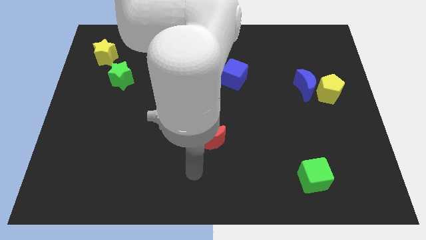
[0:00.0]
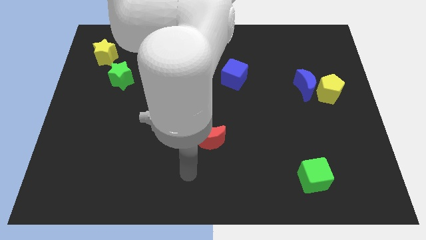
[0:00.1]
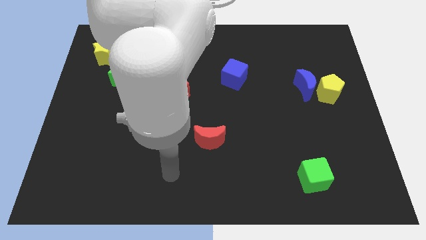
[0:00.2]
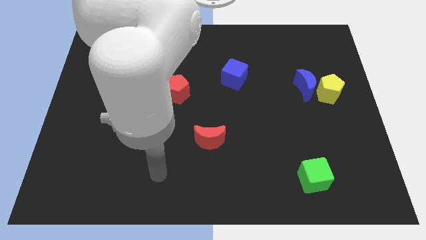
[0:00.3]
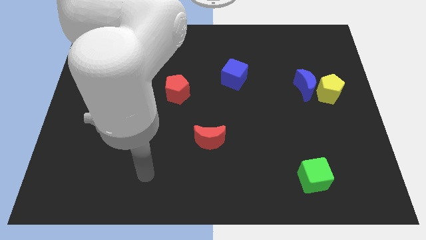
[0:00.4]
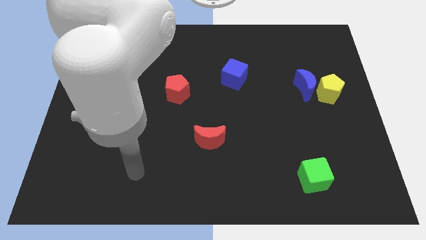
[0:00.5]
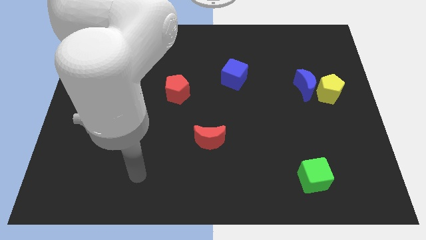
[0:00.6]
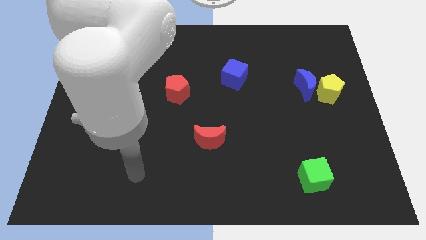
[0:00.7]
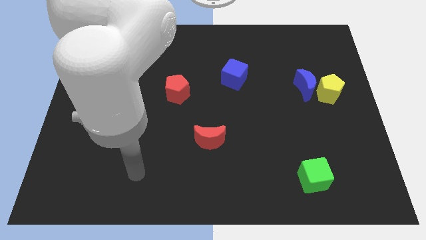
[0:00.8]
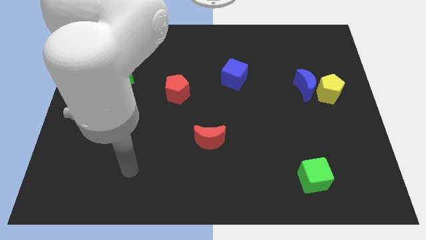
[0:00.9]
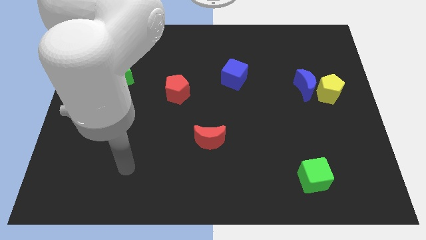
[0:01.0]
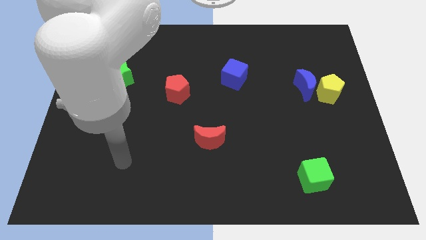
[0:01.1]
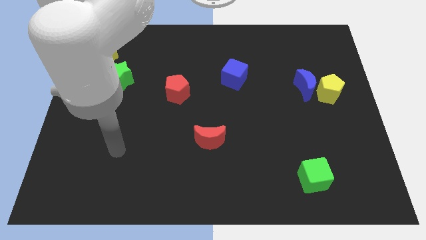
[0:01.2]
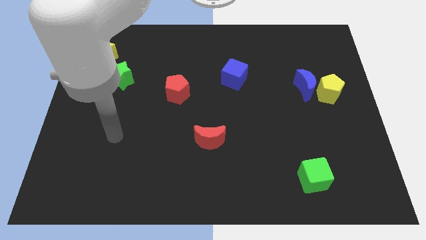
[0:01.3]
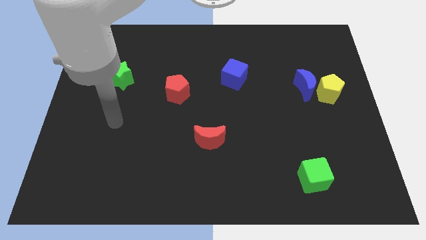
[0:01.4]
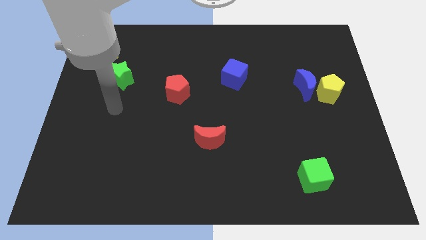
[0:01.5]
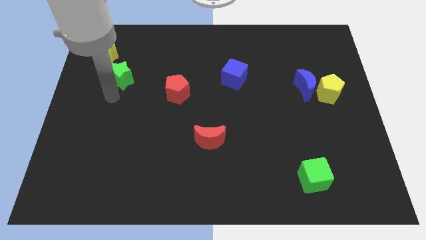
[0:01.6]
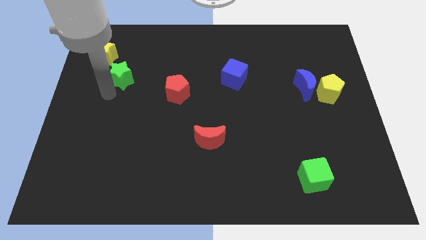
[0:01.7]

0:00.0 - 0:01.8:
point the arm below the green star

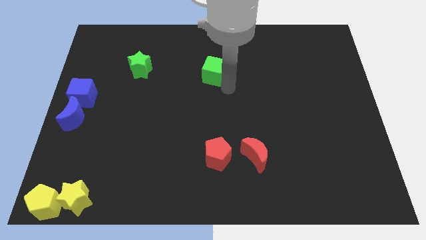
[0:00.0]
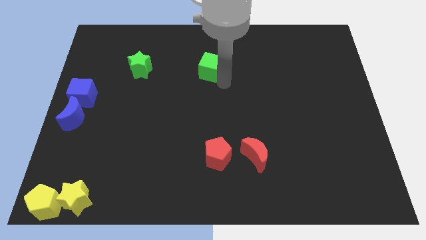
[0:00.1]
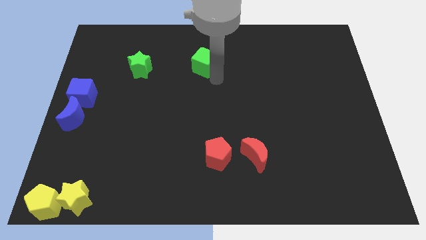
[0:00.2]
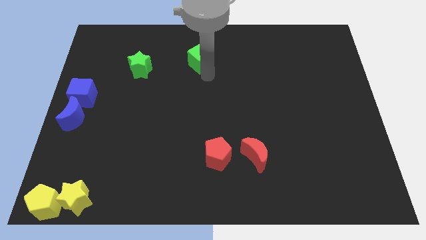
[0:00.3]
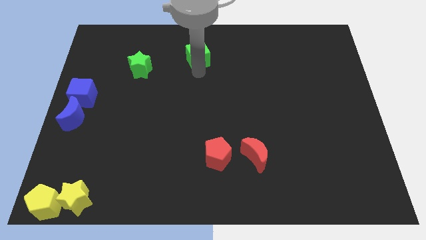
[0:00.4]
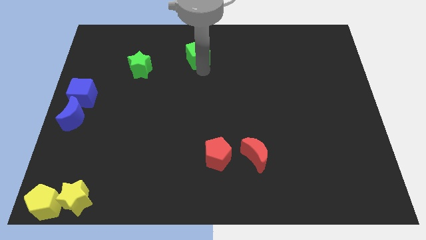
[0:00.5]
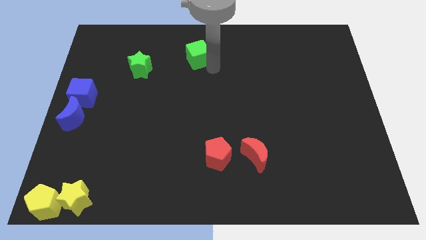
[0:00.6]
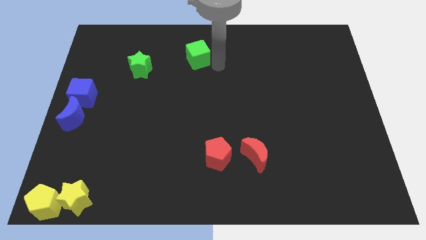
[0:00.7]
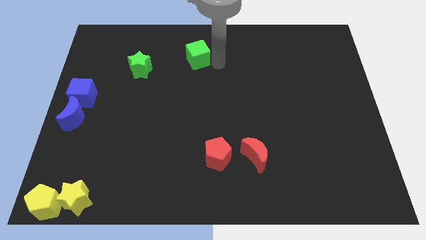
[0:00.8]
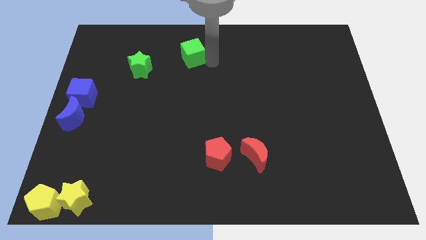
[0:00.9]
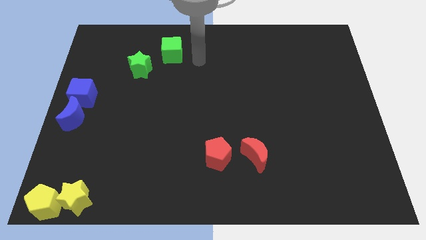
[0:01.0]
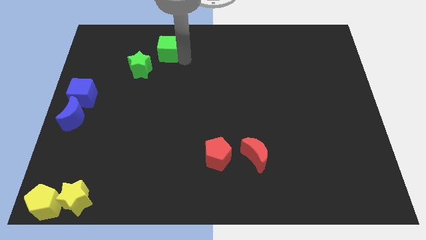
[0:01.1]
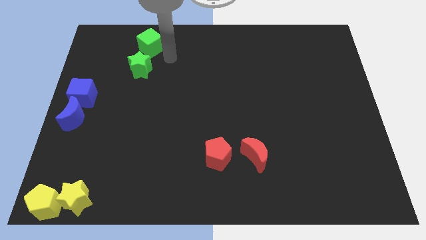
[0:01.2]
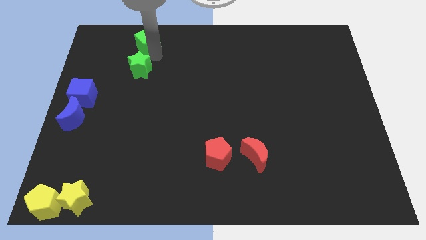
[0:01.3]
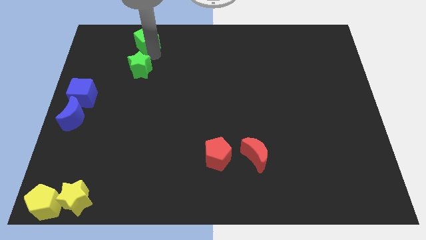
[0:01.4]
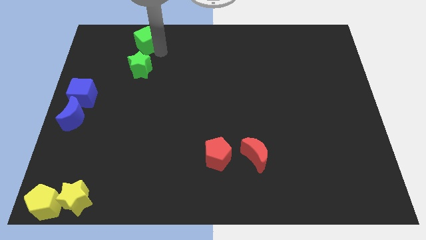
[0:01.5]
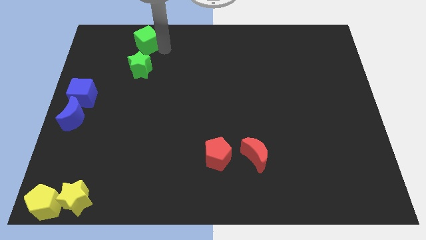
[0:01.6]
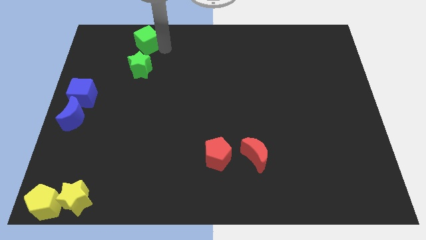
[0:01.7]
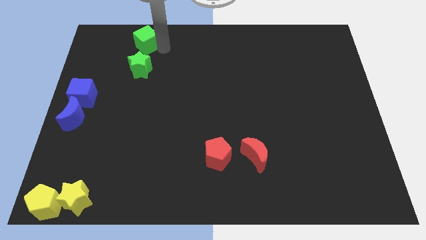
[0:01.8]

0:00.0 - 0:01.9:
plac ethe green cube above the green star

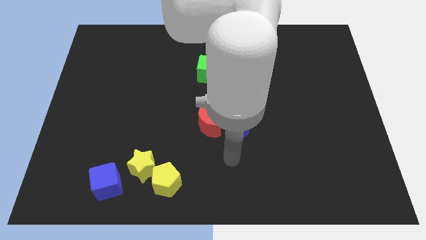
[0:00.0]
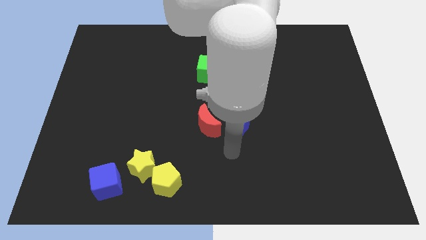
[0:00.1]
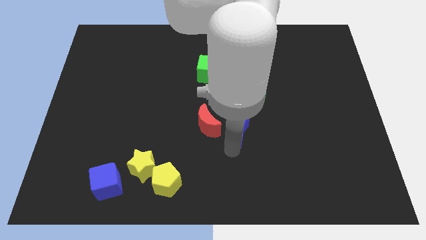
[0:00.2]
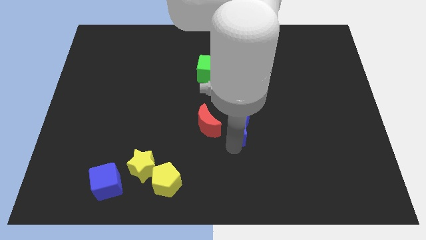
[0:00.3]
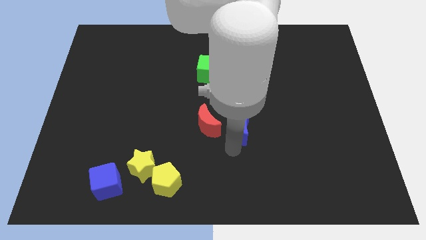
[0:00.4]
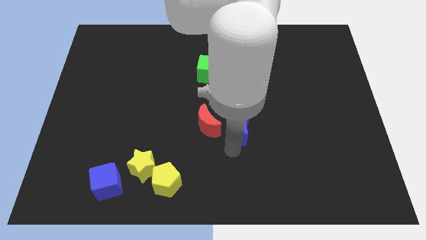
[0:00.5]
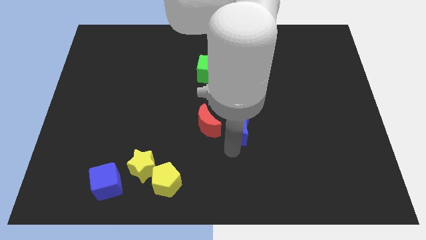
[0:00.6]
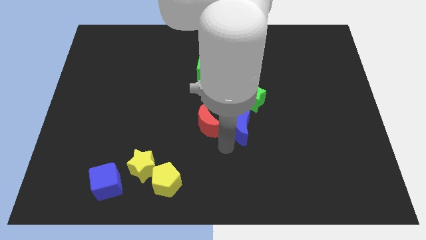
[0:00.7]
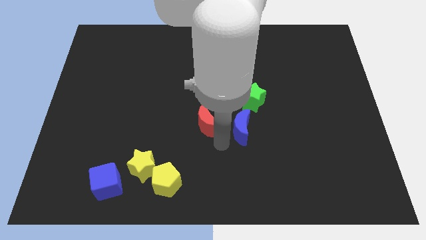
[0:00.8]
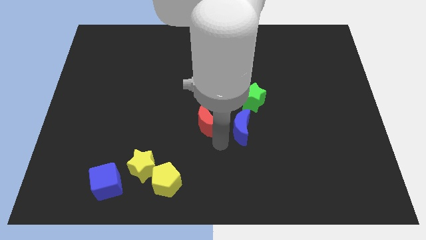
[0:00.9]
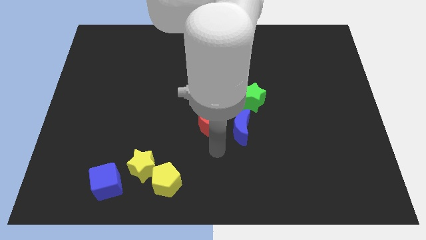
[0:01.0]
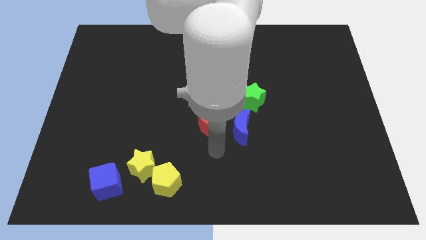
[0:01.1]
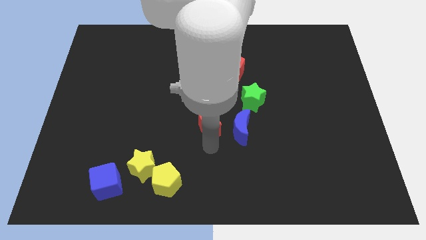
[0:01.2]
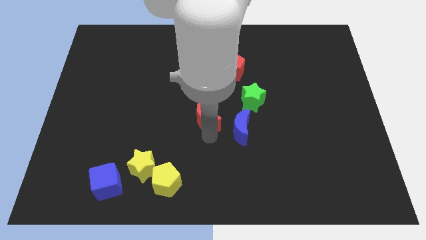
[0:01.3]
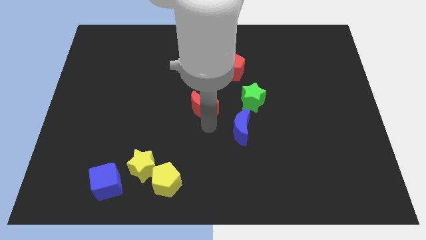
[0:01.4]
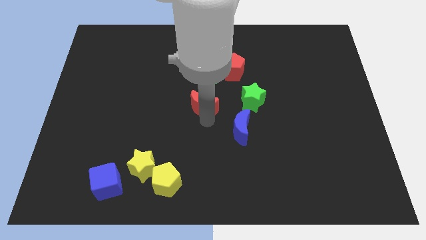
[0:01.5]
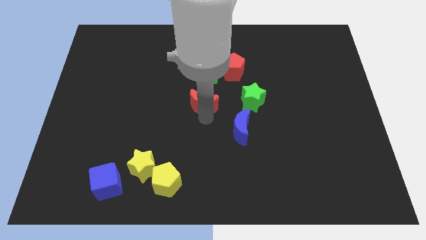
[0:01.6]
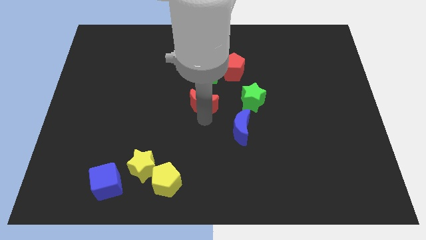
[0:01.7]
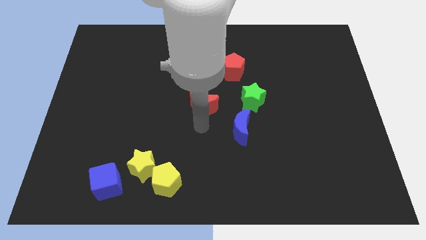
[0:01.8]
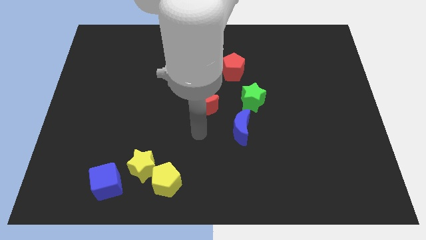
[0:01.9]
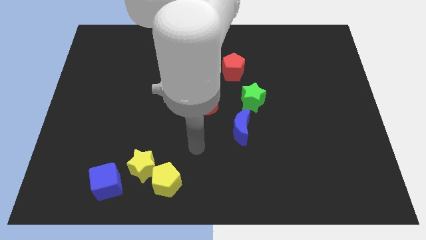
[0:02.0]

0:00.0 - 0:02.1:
slightly move the red moon to the bottom side of the green cube

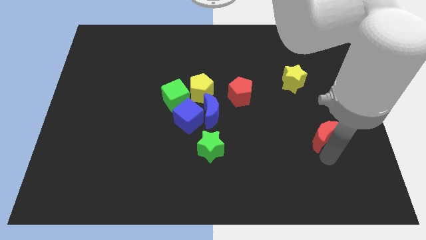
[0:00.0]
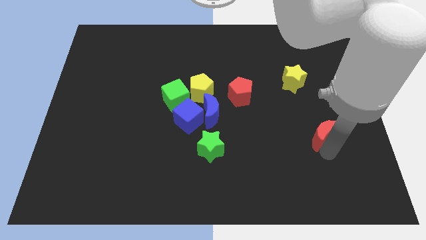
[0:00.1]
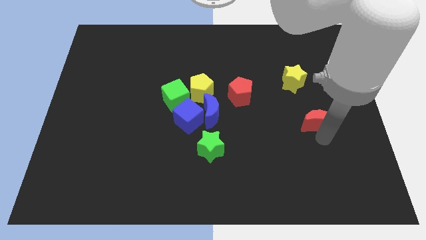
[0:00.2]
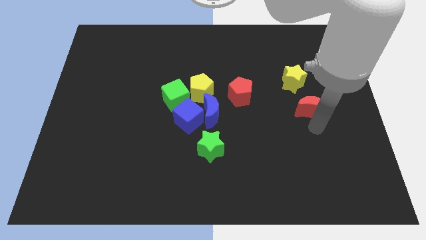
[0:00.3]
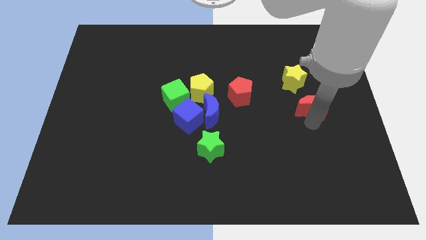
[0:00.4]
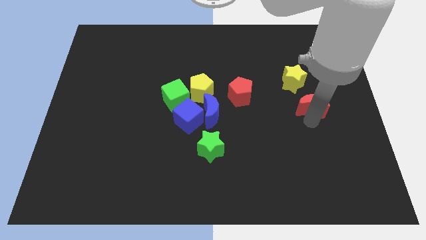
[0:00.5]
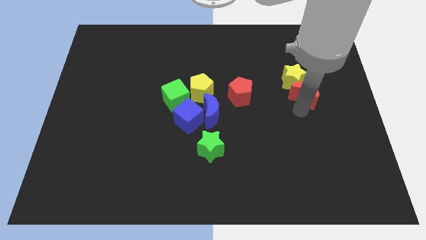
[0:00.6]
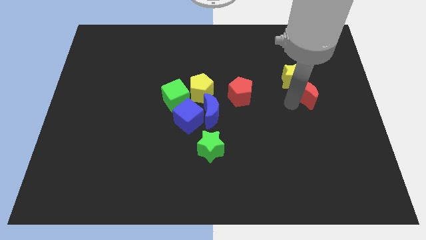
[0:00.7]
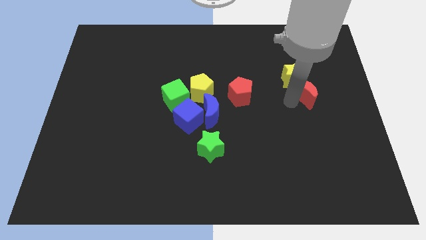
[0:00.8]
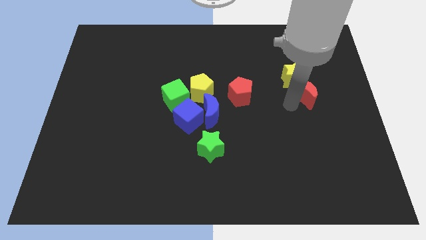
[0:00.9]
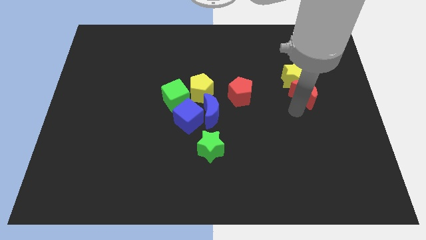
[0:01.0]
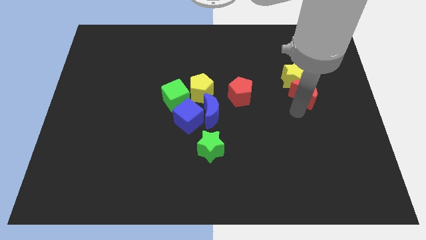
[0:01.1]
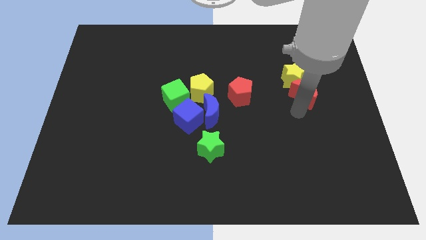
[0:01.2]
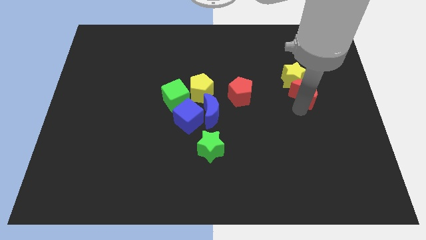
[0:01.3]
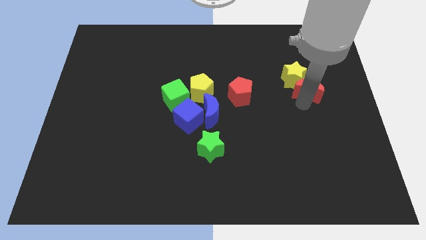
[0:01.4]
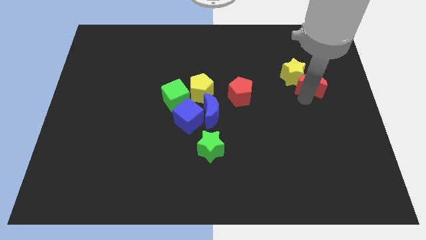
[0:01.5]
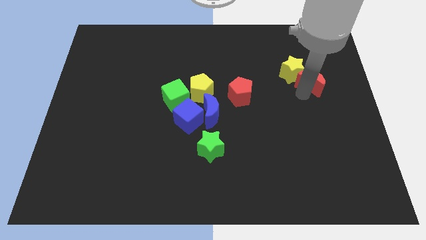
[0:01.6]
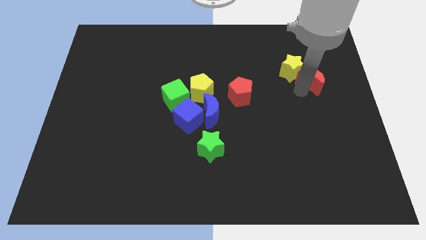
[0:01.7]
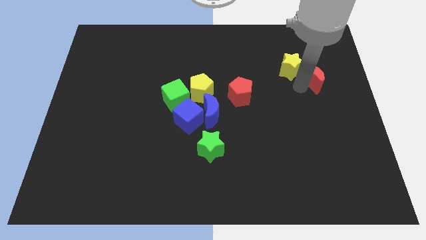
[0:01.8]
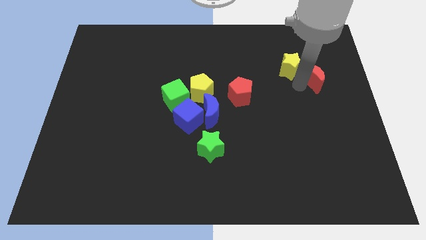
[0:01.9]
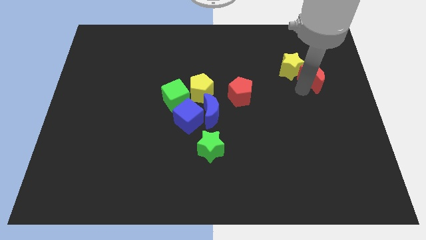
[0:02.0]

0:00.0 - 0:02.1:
place the red moon below the yellow star

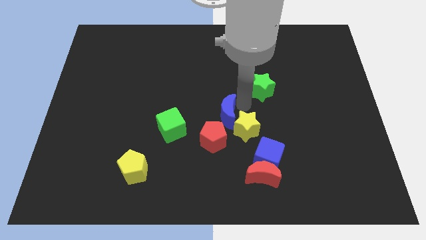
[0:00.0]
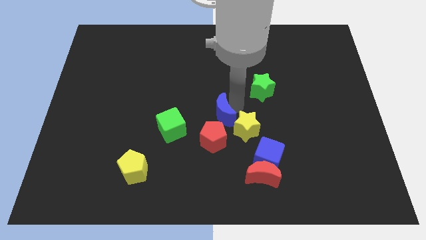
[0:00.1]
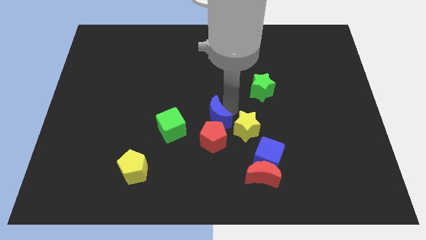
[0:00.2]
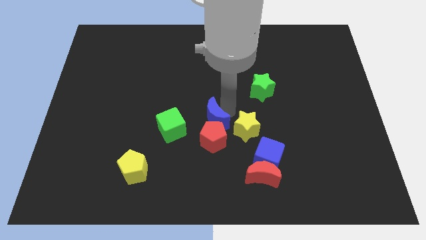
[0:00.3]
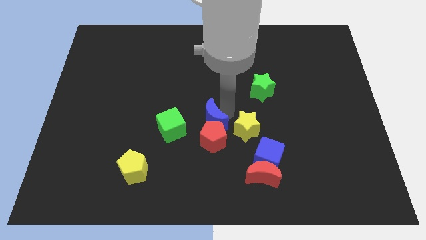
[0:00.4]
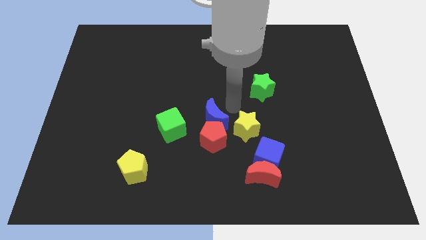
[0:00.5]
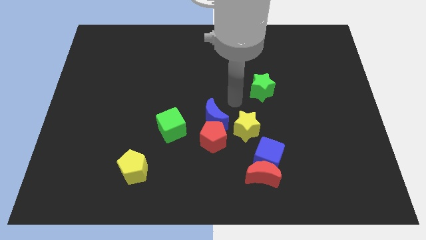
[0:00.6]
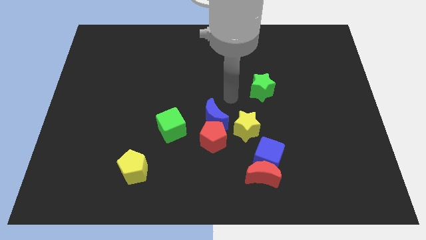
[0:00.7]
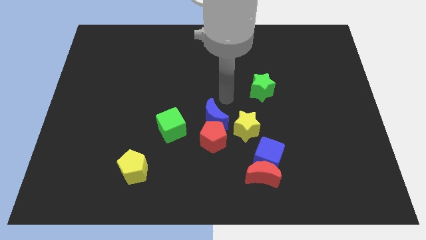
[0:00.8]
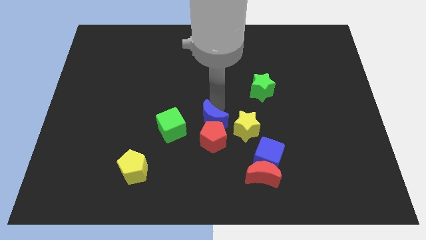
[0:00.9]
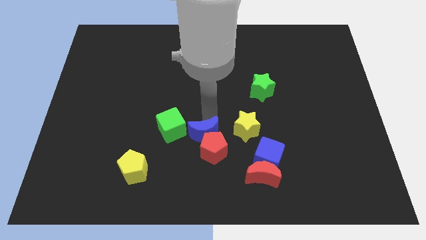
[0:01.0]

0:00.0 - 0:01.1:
place blue moon above red pentagon
